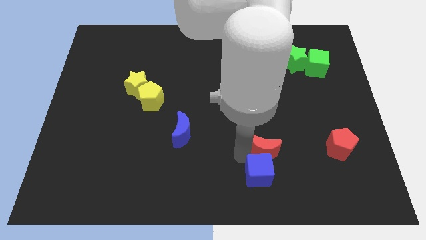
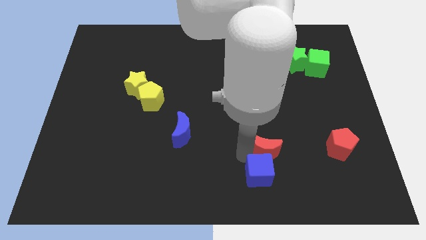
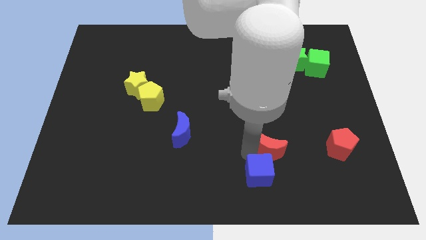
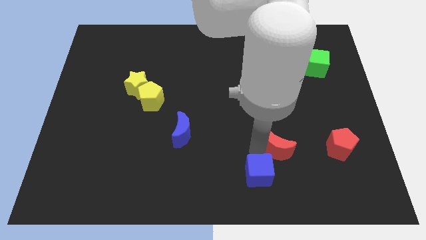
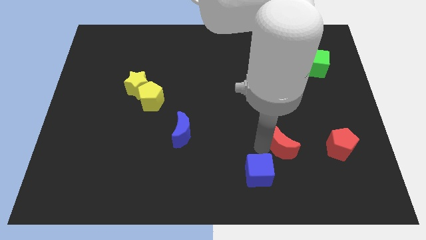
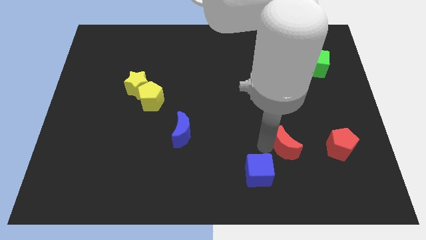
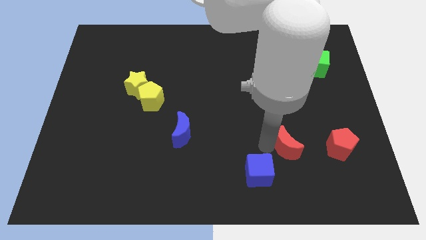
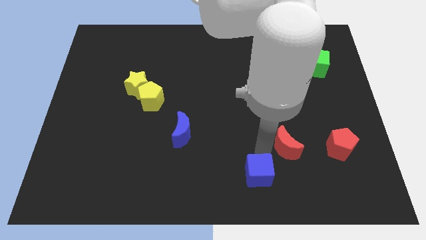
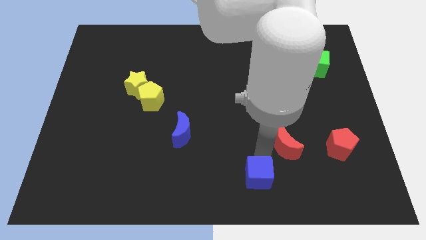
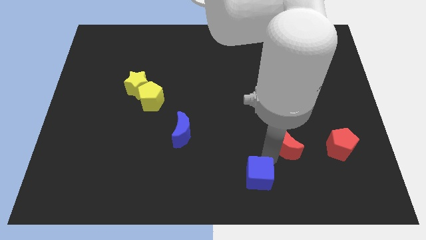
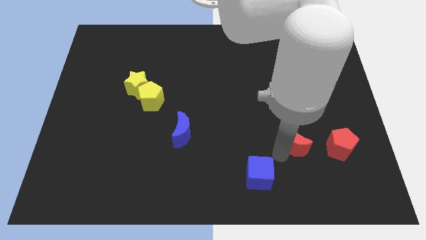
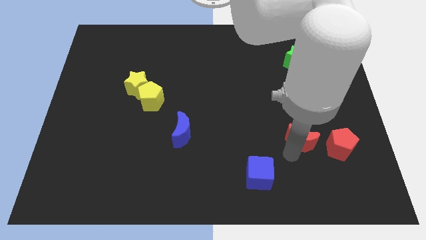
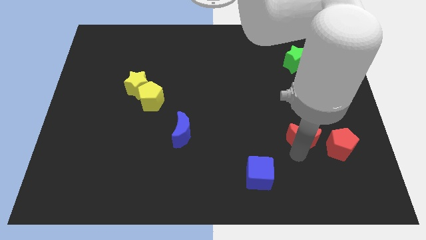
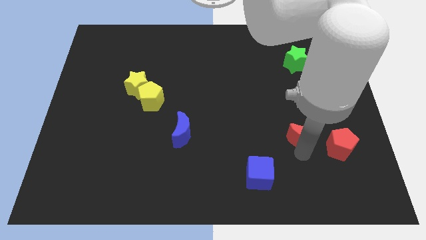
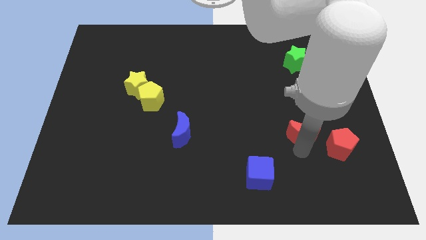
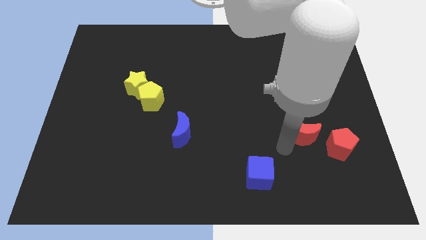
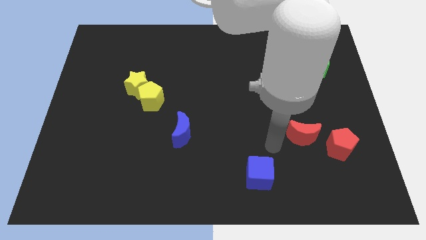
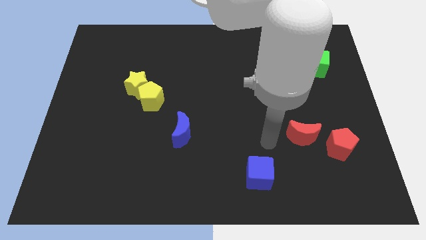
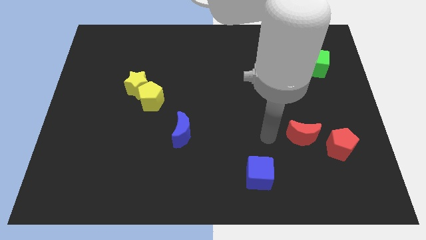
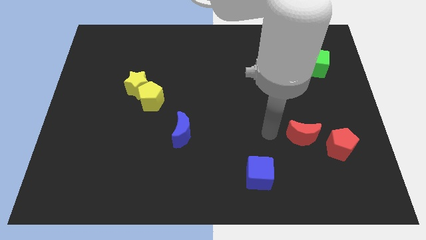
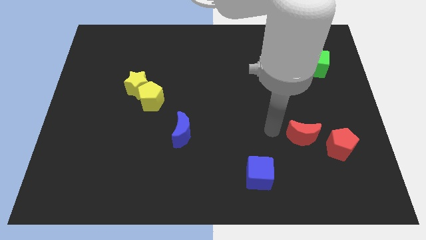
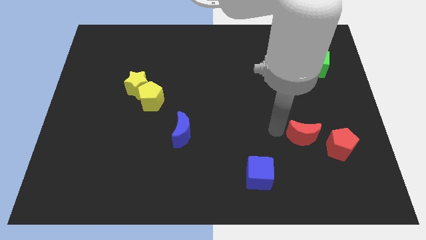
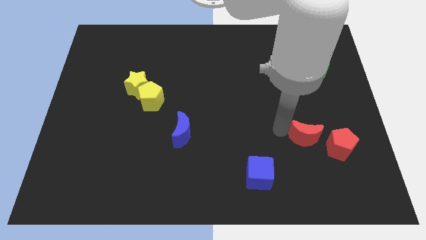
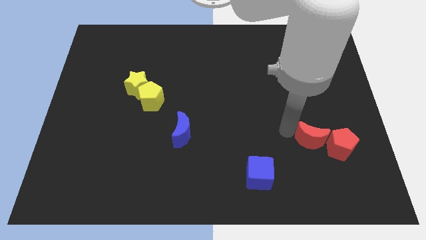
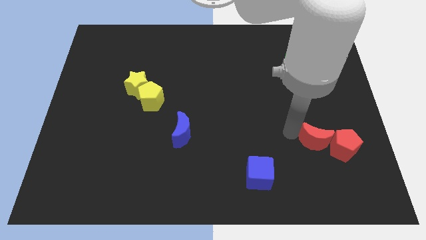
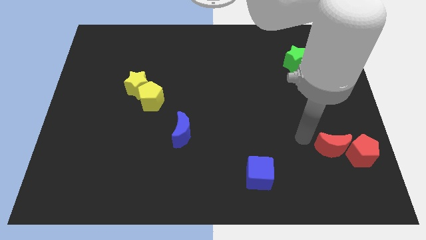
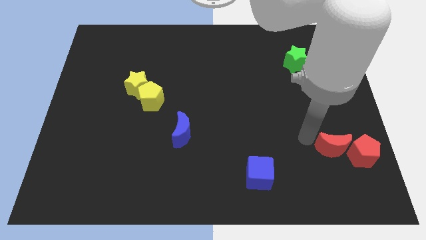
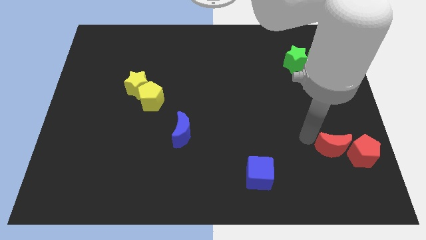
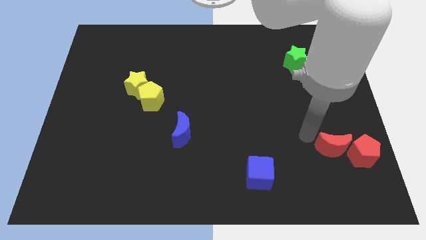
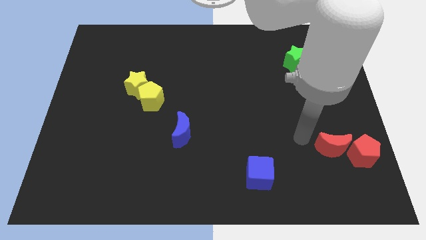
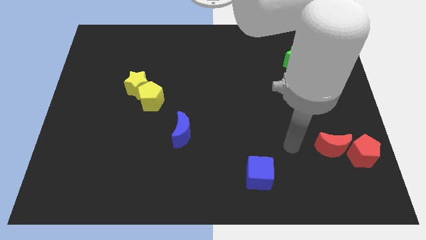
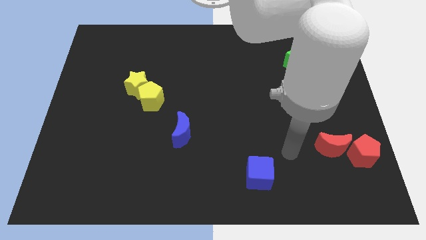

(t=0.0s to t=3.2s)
move the red moon into the red pentagon

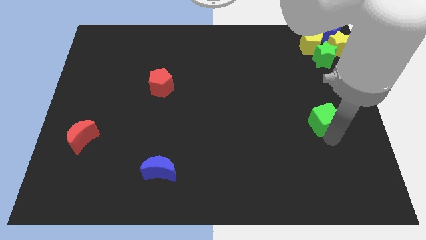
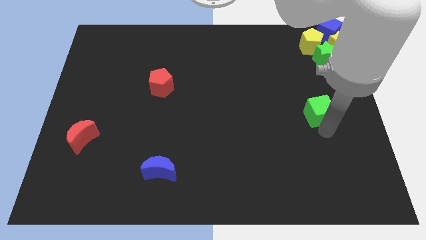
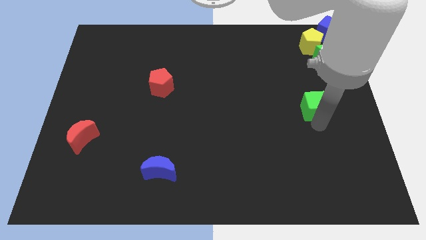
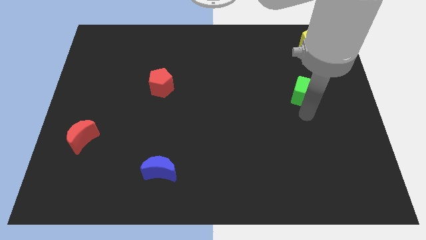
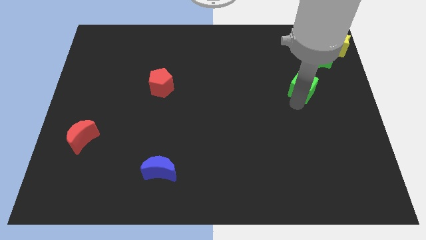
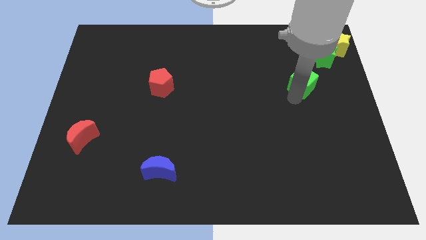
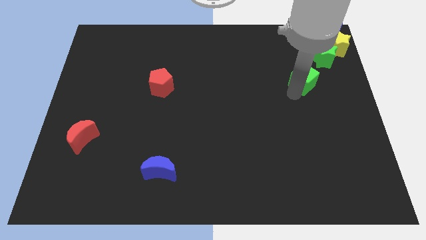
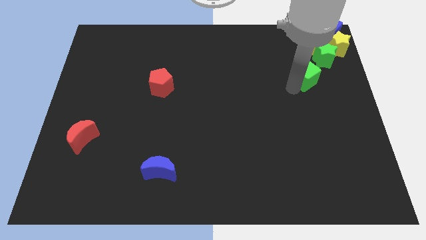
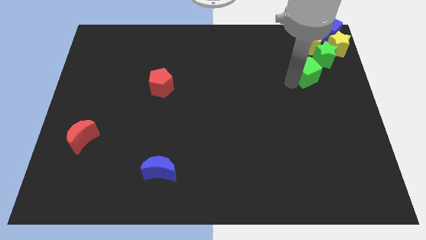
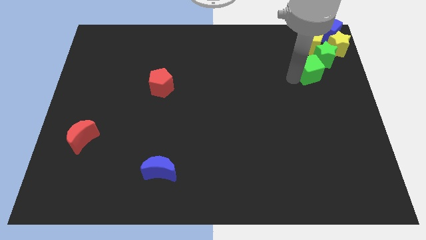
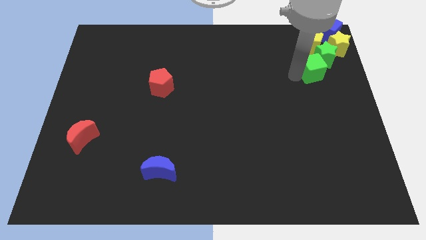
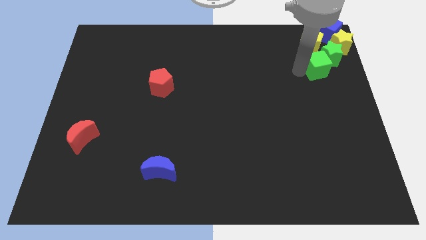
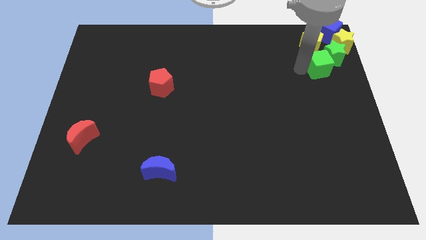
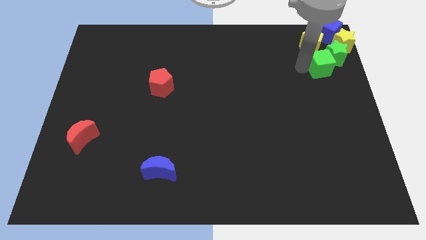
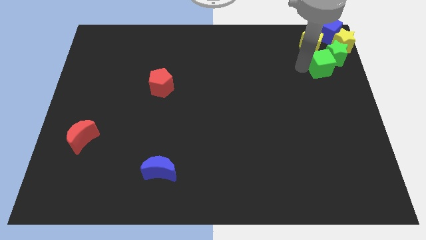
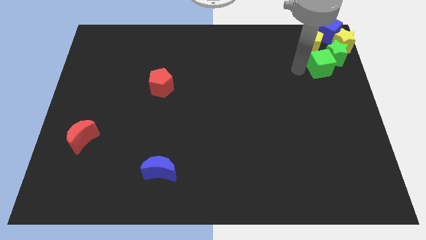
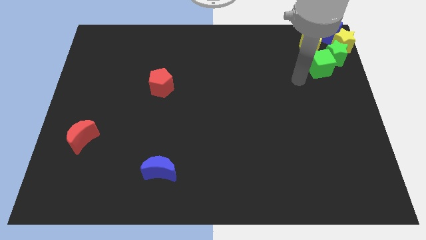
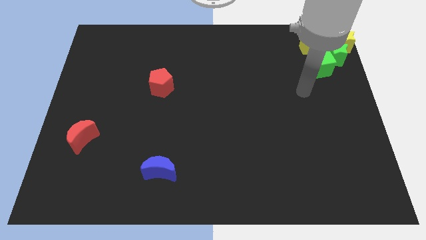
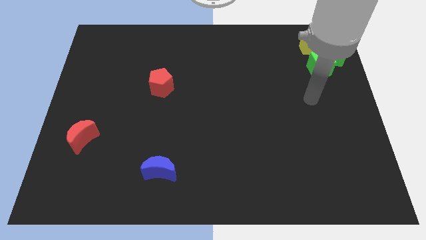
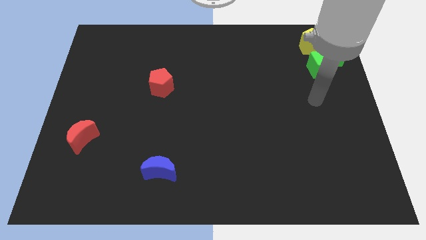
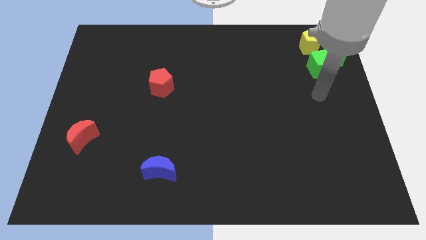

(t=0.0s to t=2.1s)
push the green cube into the green star

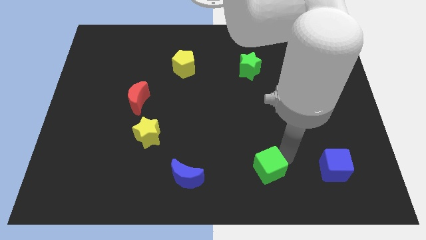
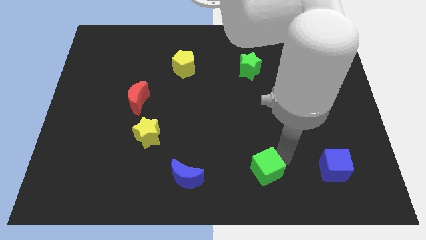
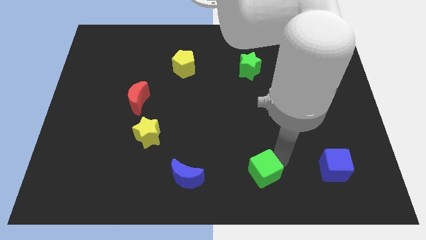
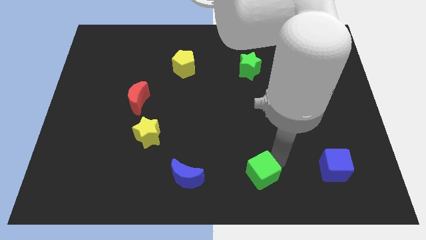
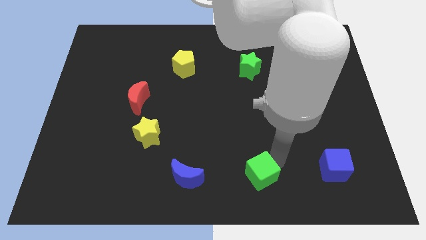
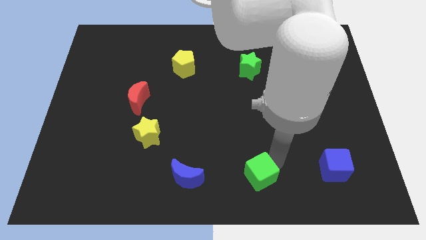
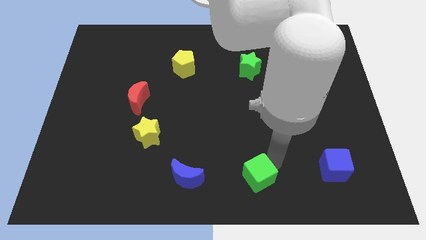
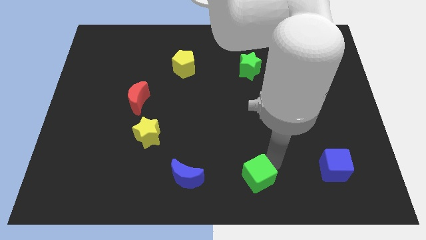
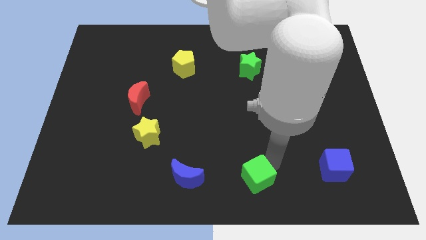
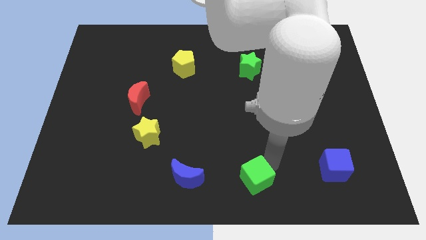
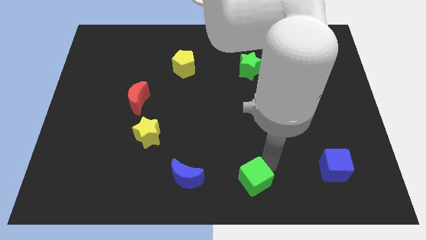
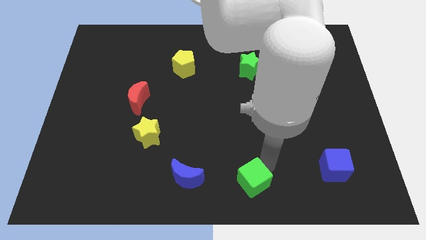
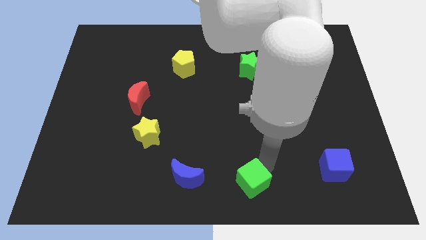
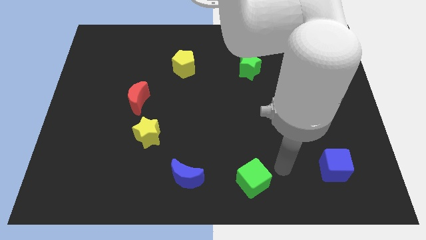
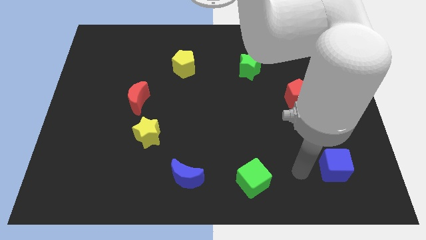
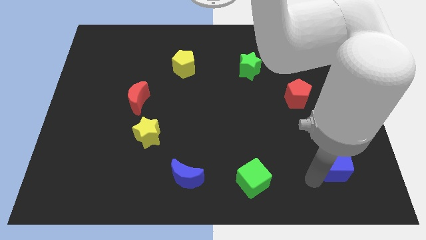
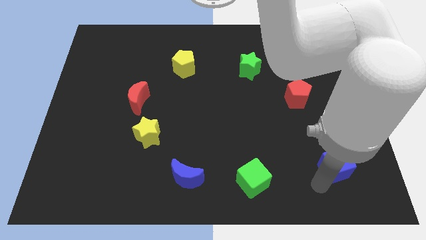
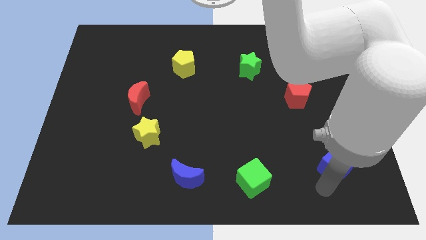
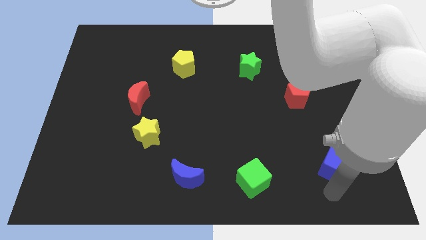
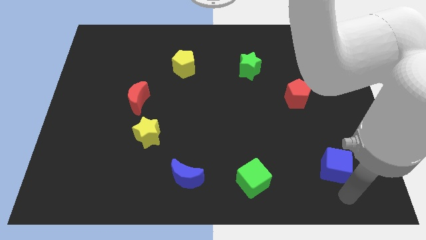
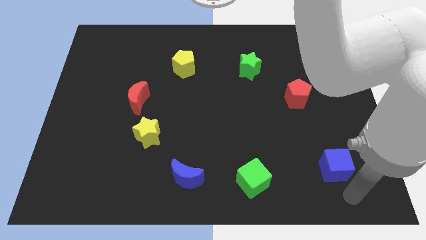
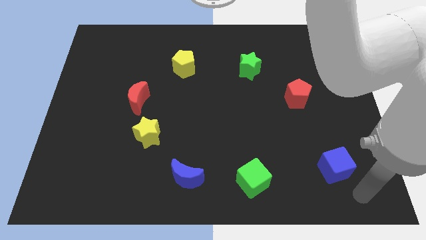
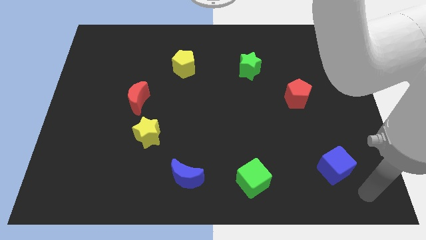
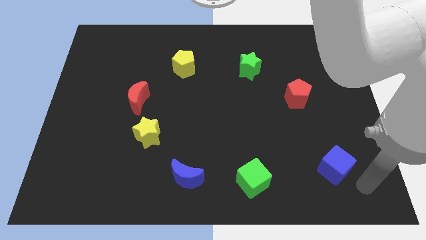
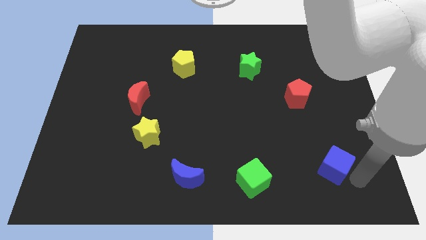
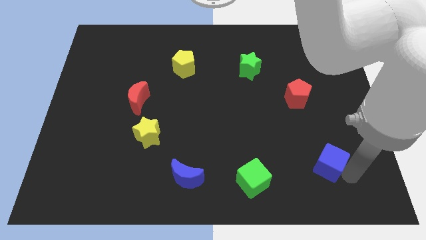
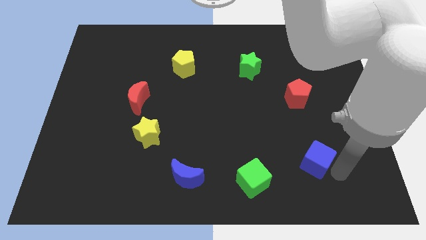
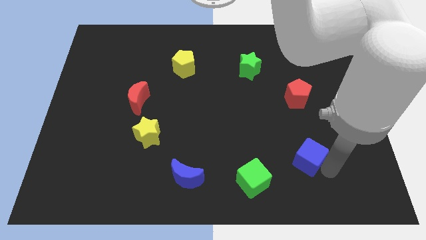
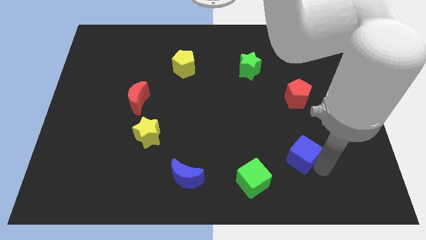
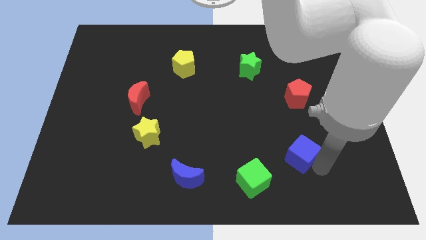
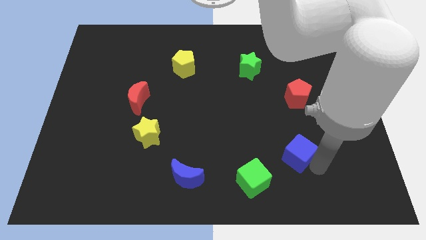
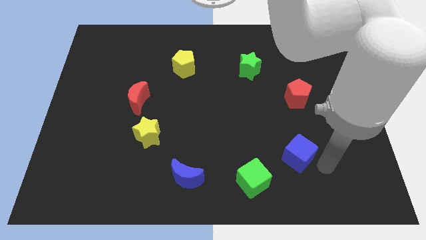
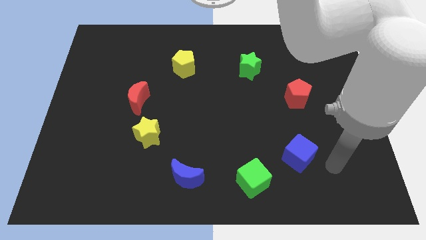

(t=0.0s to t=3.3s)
place the blue cube diagonal to the green cube

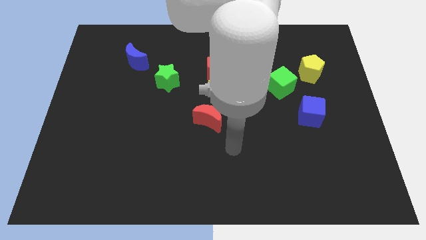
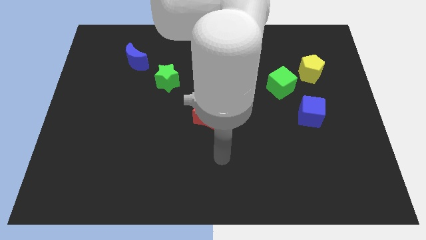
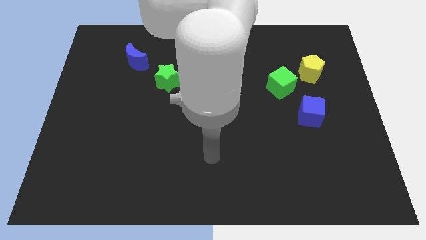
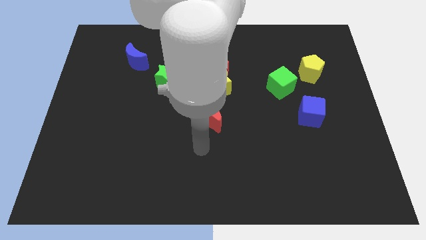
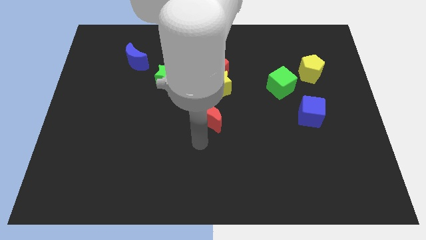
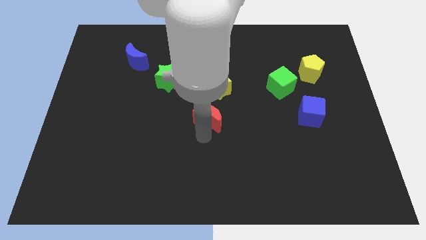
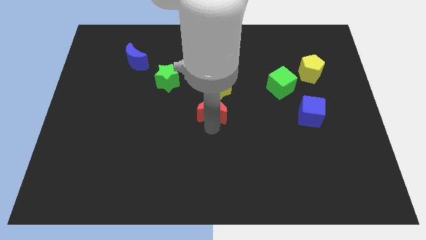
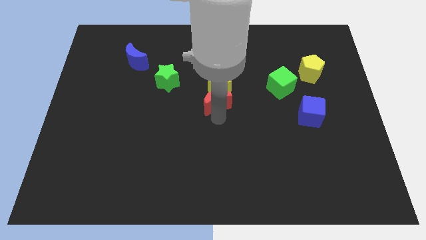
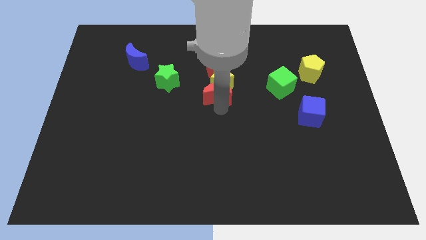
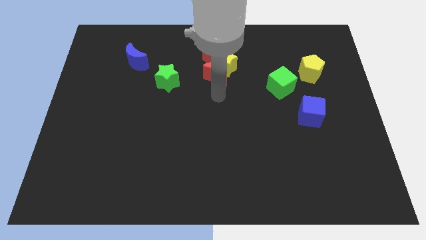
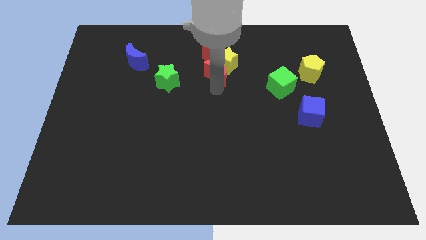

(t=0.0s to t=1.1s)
push the red pentagon into the yellow star
